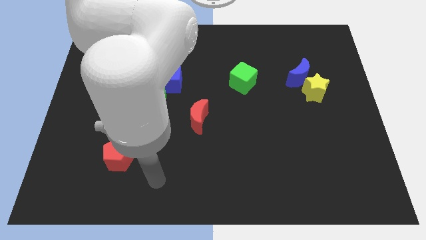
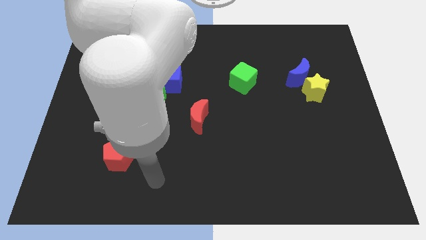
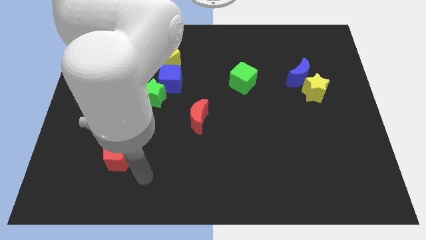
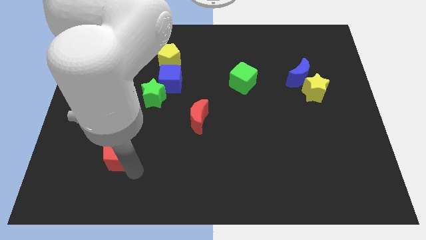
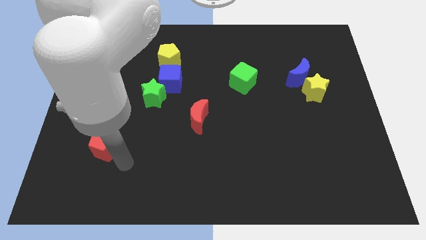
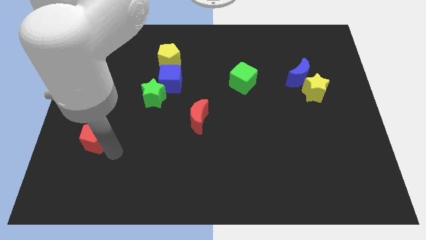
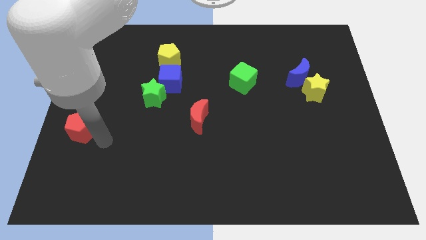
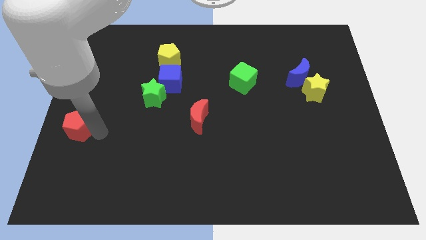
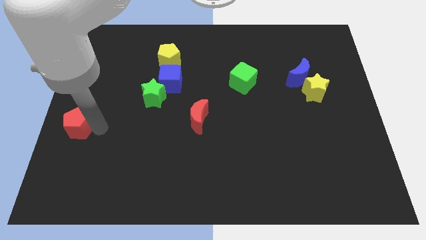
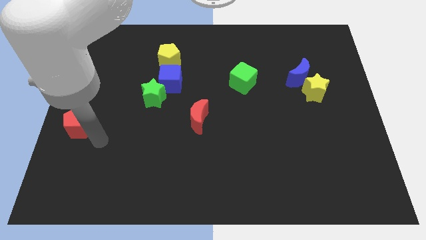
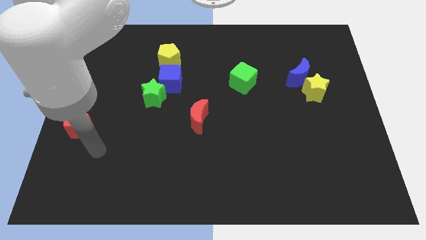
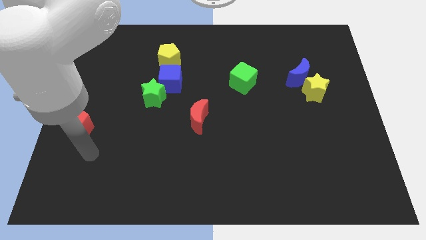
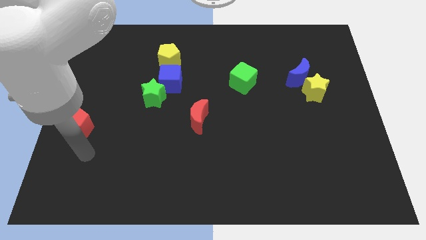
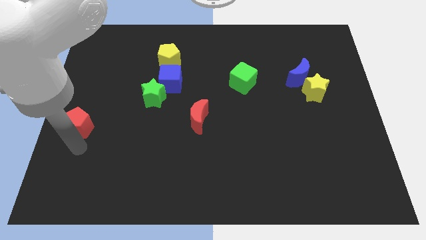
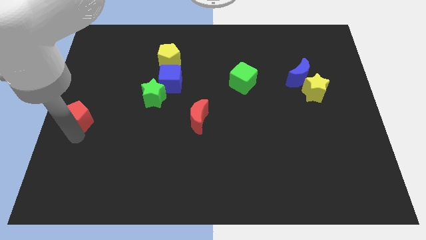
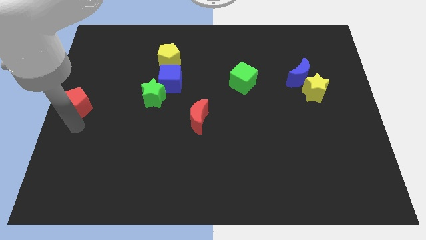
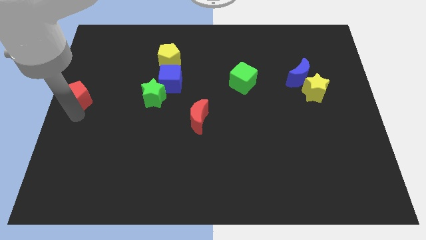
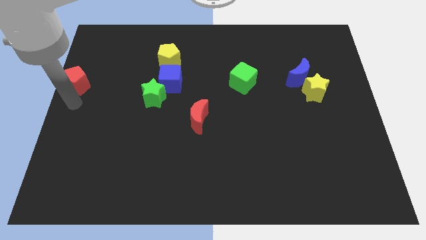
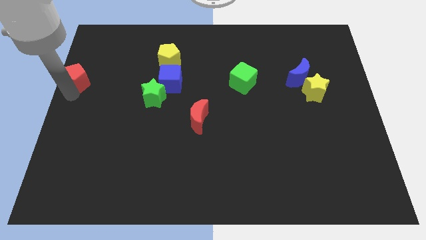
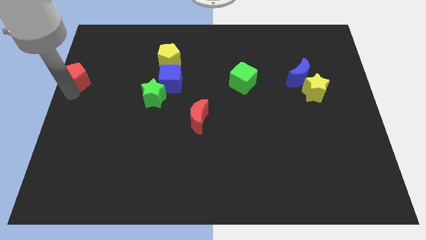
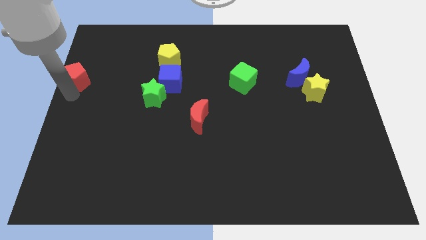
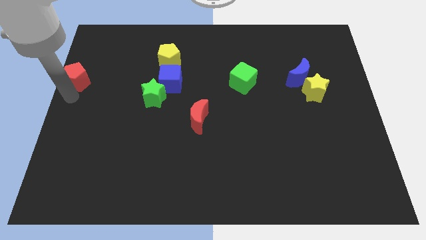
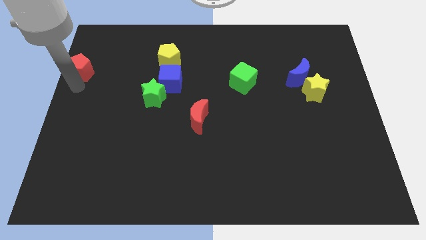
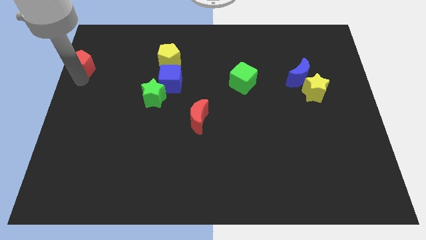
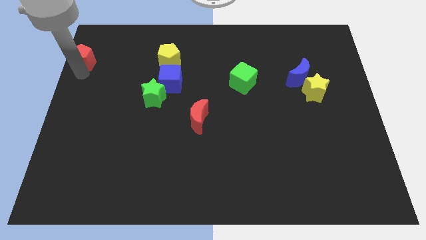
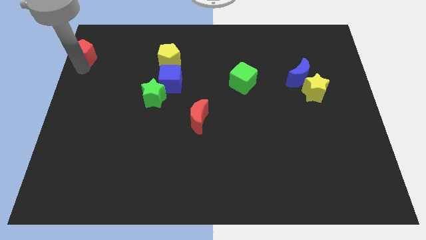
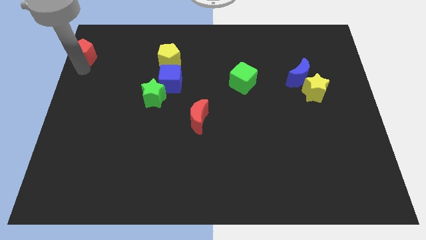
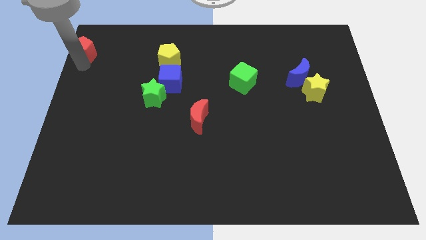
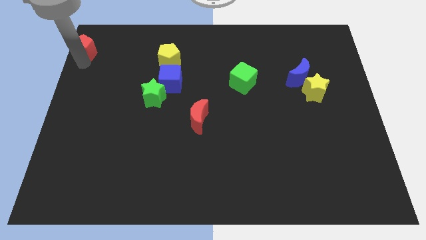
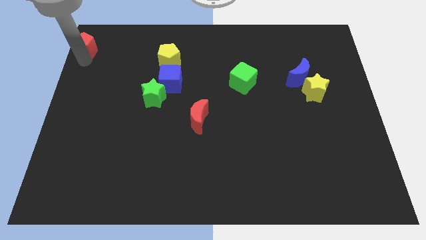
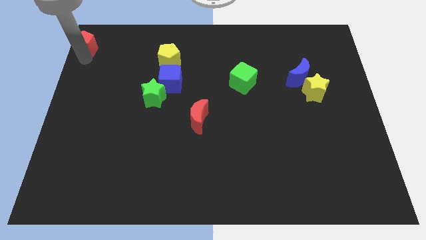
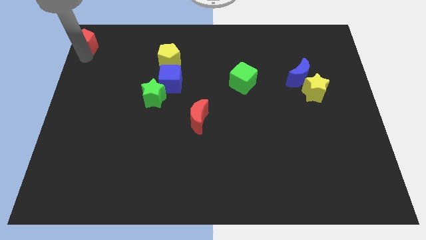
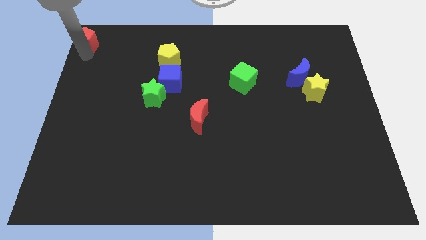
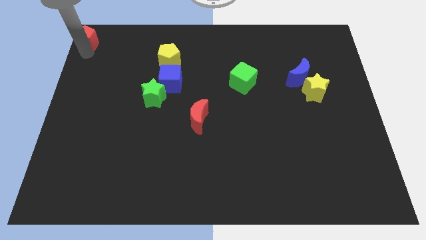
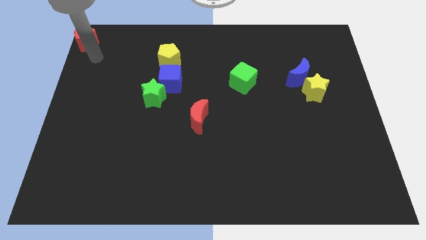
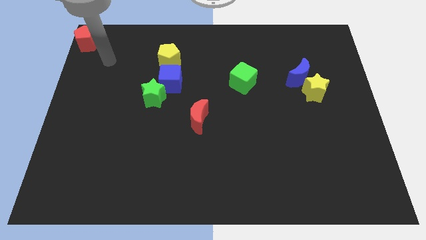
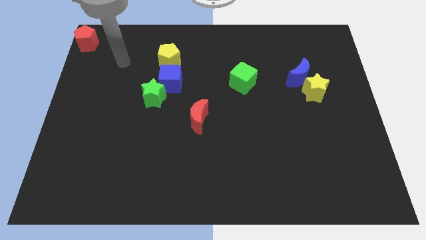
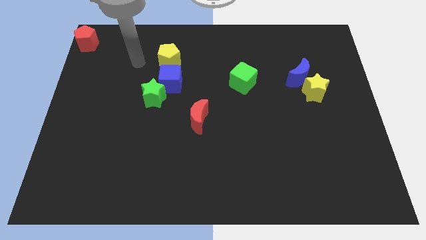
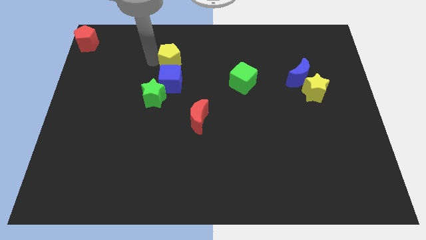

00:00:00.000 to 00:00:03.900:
push the red pentagon towards the top left corner of the board

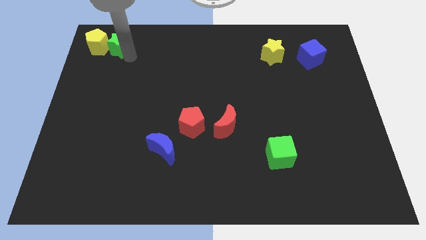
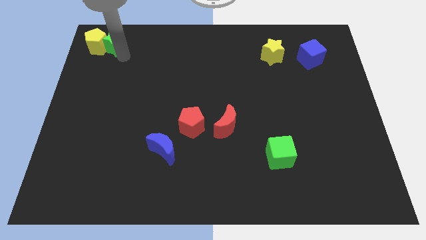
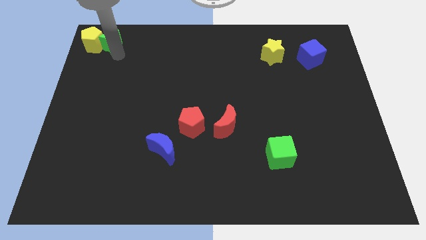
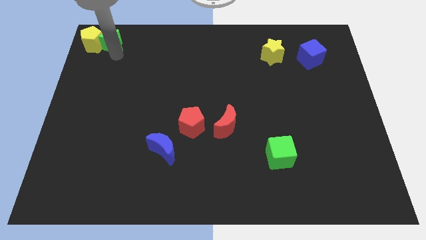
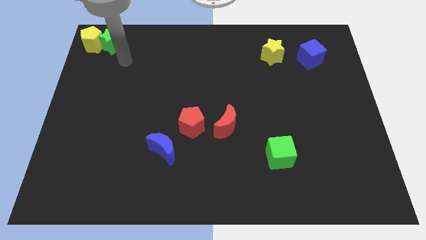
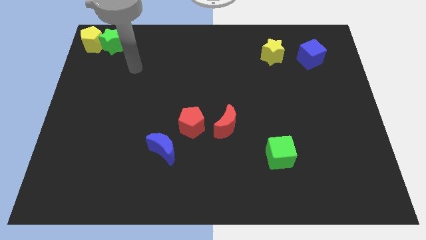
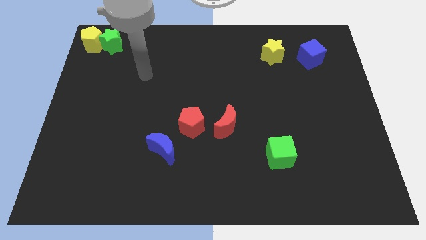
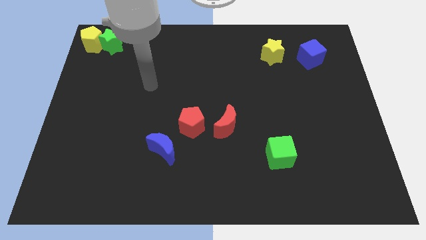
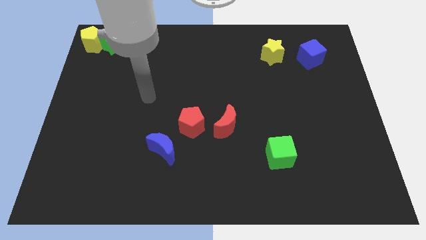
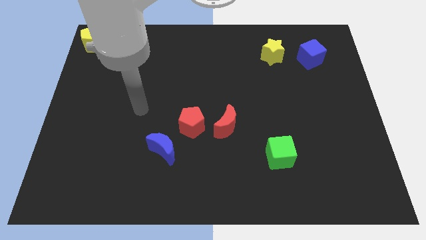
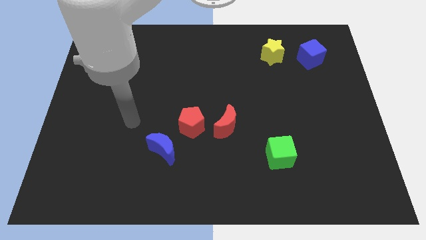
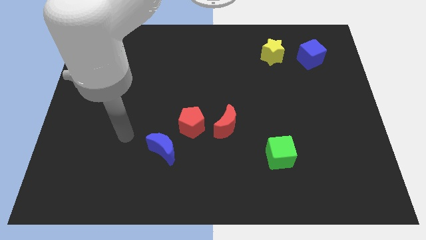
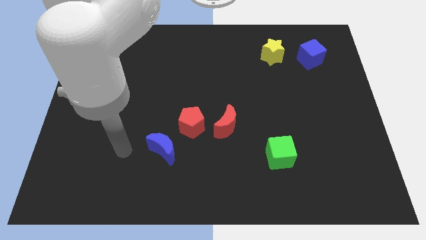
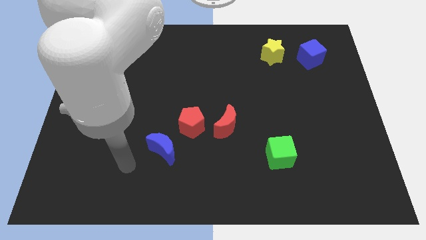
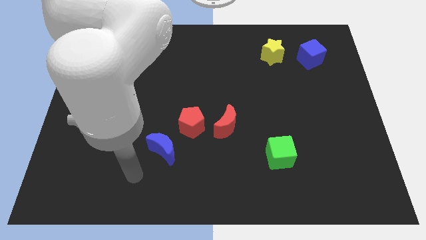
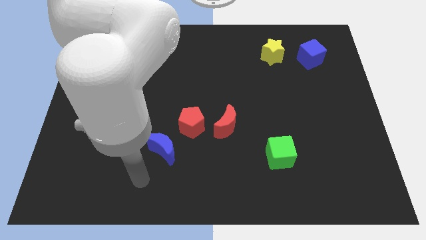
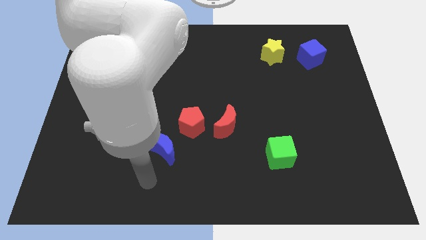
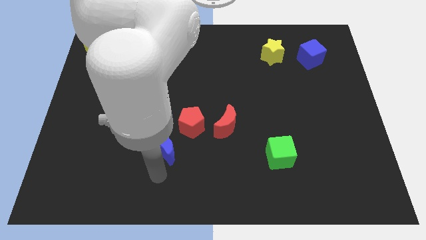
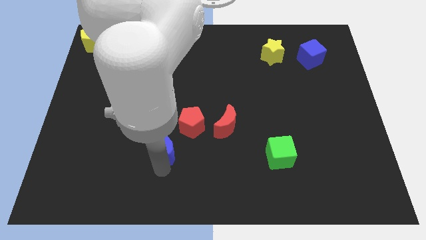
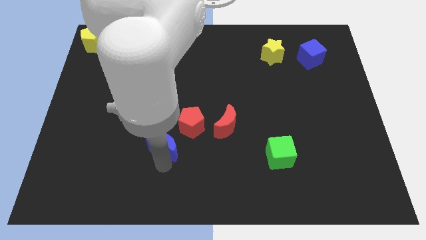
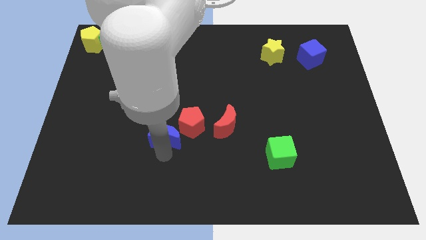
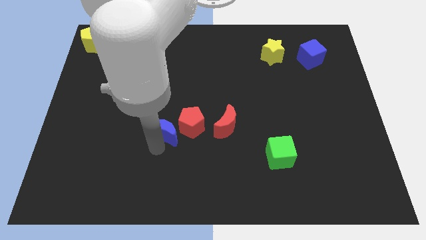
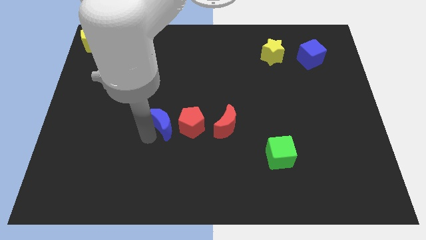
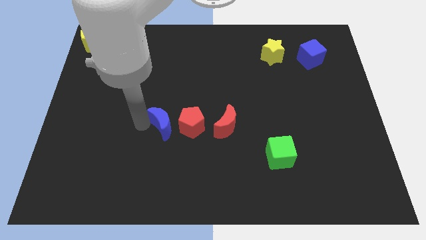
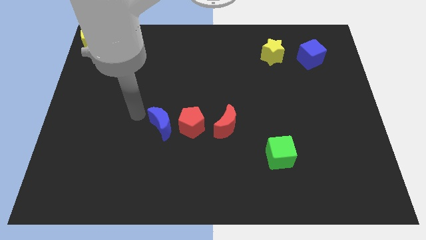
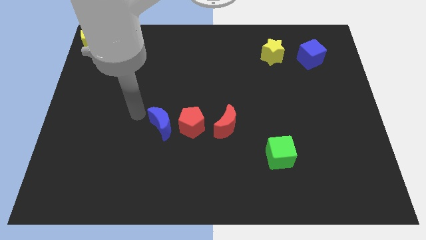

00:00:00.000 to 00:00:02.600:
move the blue moon to the left of the red pentagon

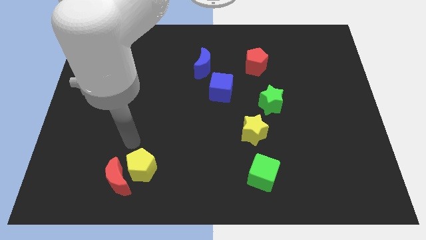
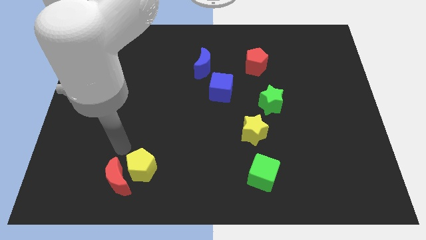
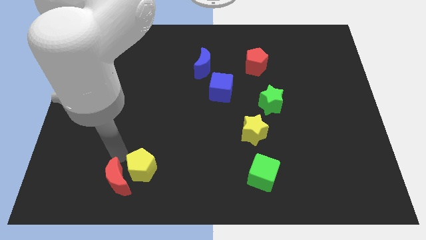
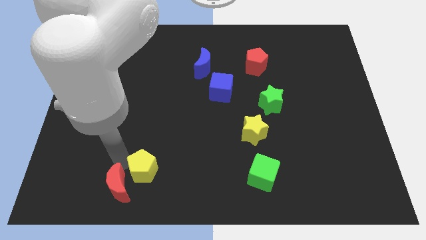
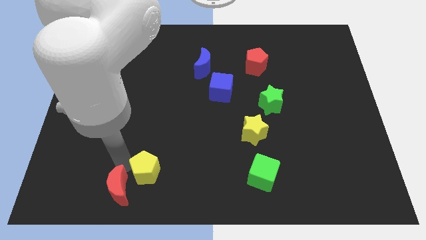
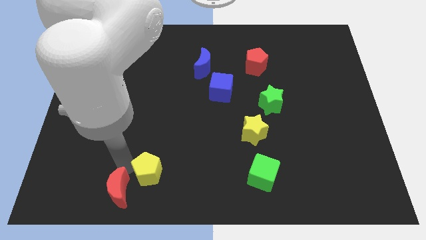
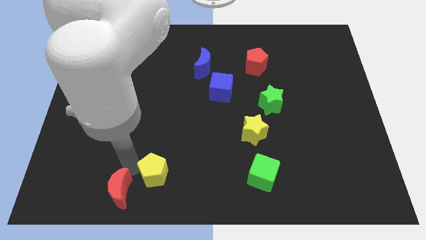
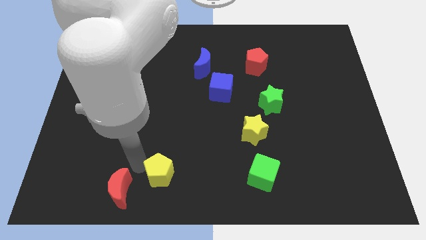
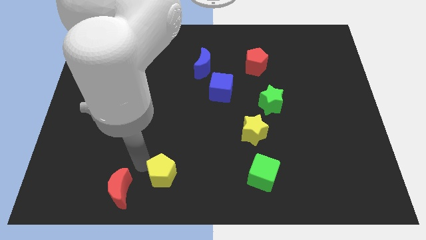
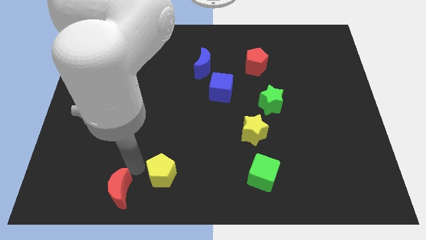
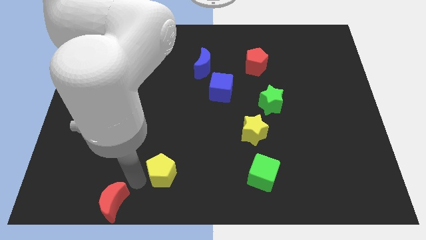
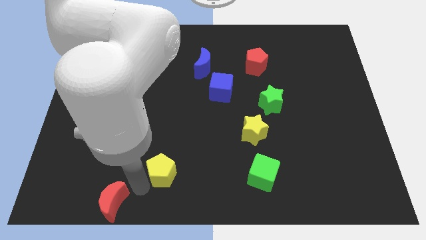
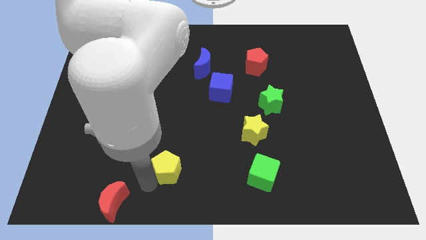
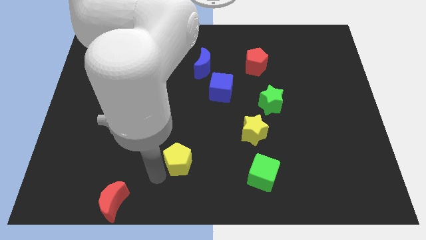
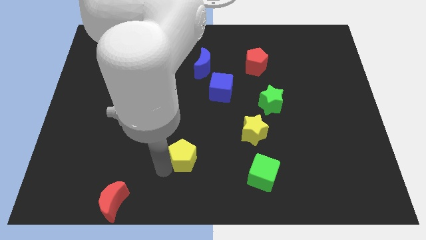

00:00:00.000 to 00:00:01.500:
separate the yellow pentagon from the red crescent

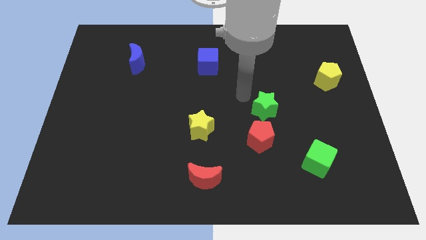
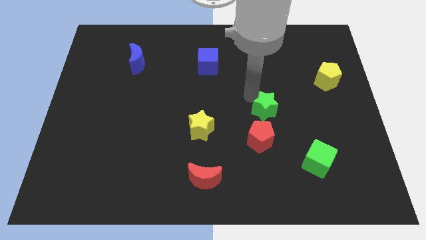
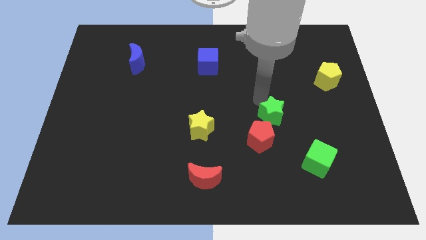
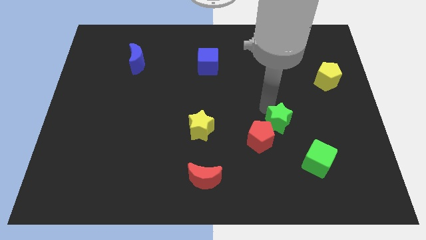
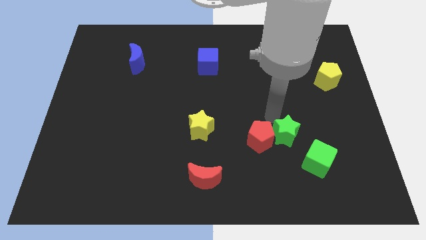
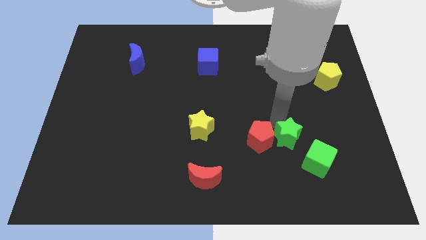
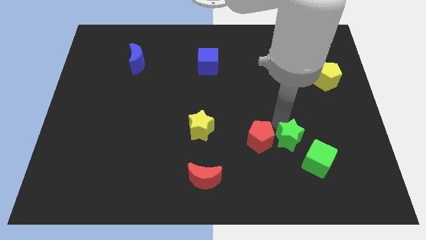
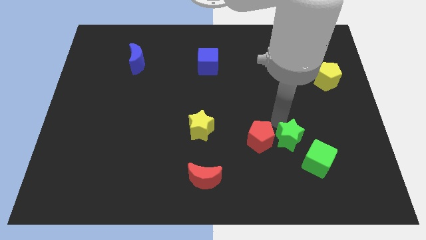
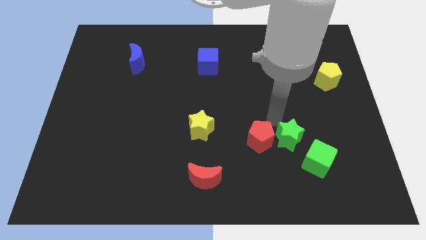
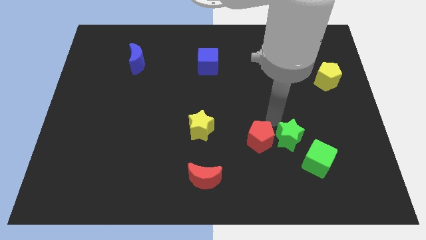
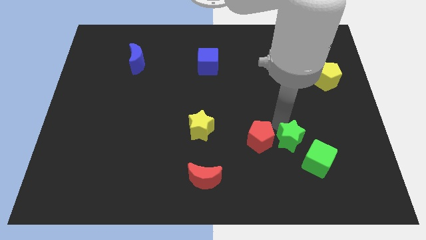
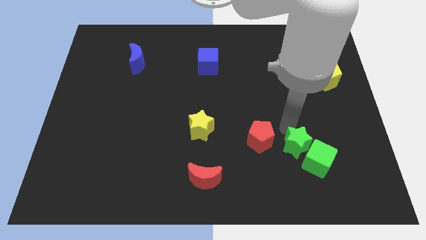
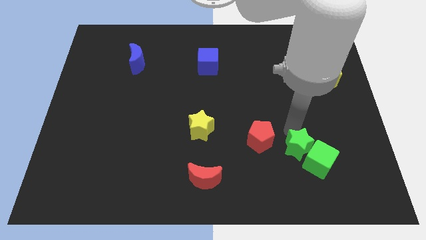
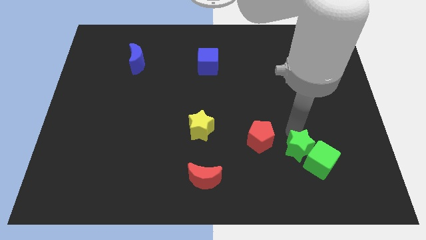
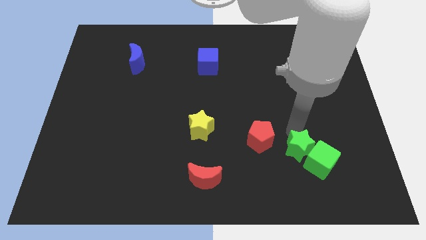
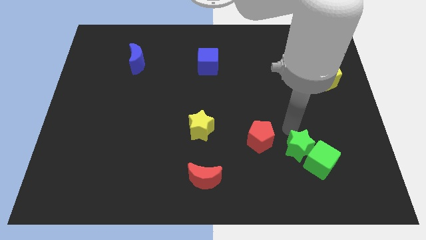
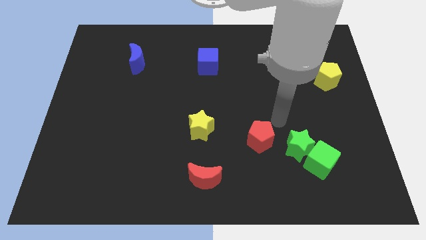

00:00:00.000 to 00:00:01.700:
push the green star into the green cube
